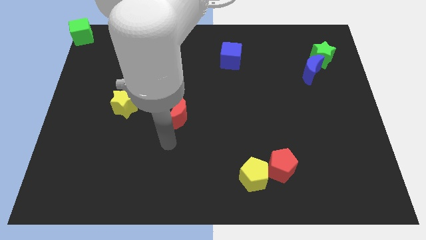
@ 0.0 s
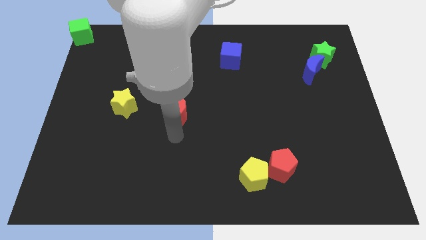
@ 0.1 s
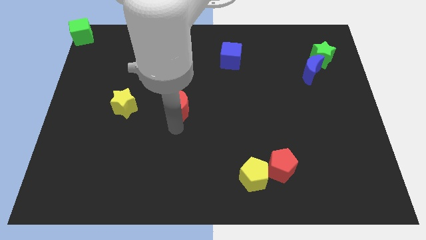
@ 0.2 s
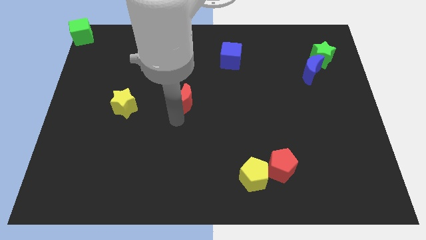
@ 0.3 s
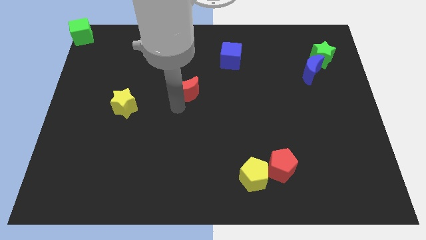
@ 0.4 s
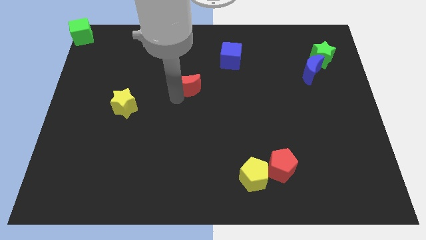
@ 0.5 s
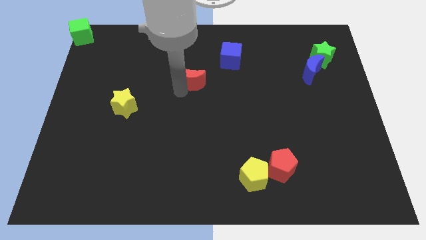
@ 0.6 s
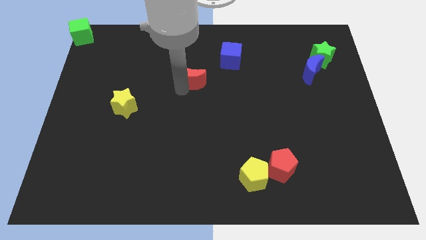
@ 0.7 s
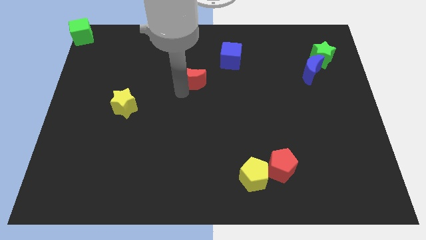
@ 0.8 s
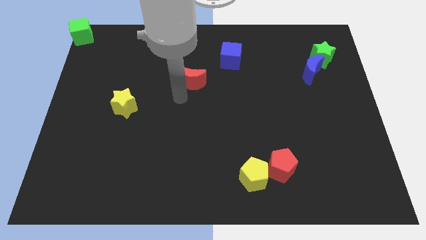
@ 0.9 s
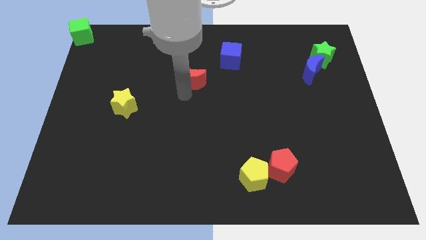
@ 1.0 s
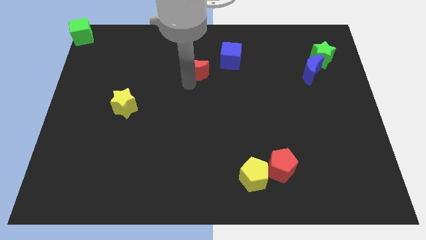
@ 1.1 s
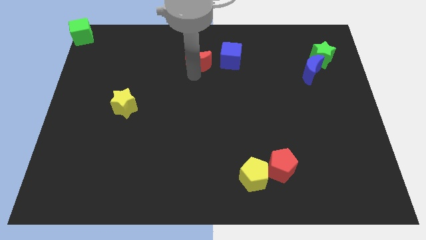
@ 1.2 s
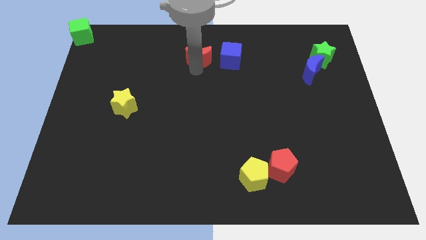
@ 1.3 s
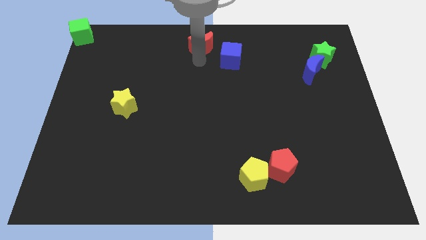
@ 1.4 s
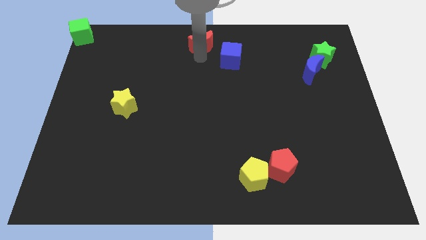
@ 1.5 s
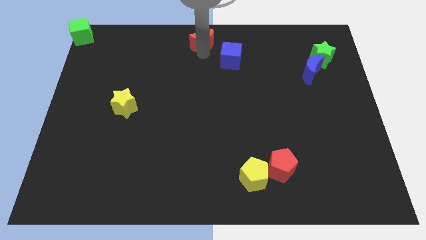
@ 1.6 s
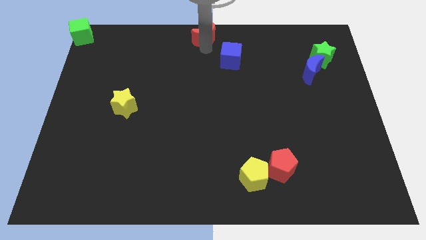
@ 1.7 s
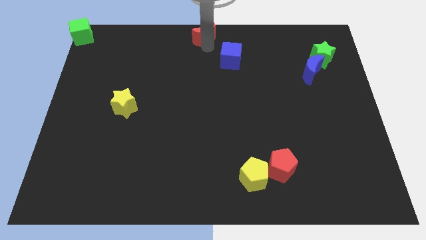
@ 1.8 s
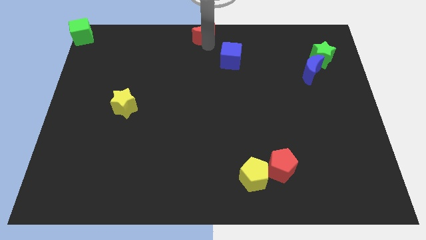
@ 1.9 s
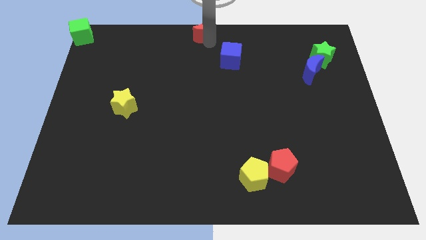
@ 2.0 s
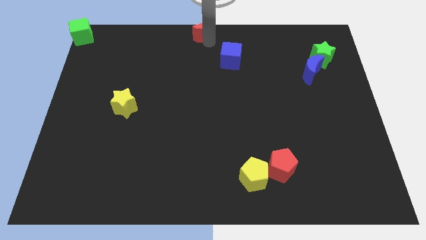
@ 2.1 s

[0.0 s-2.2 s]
move the red moon to the top center of the board

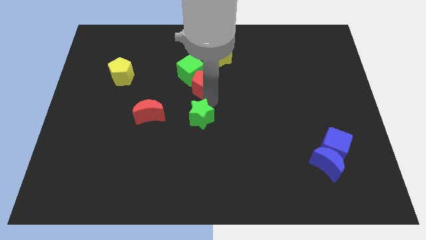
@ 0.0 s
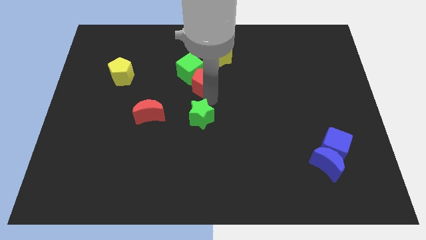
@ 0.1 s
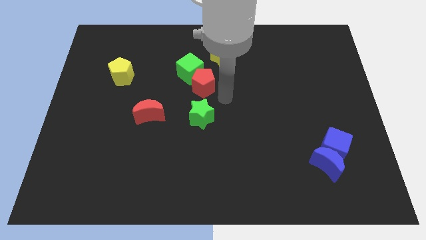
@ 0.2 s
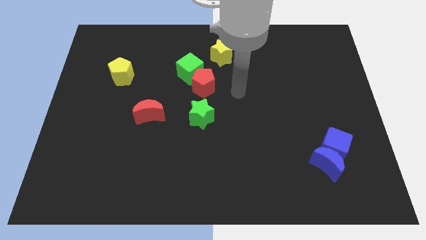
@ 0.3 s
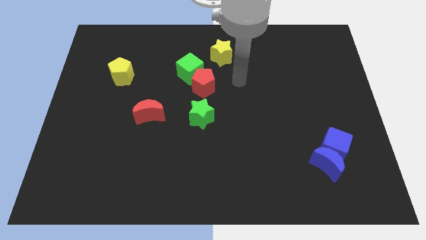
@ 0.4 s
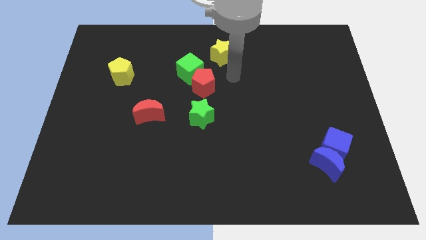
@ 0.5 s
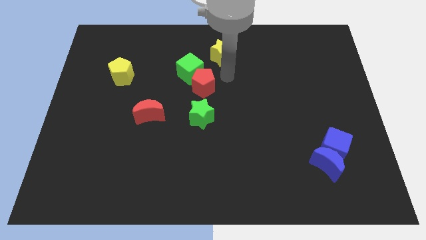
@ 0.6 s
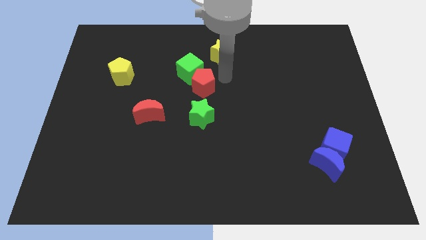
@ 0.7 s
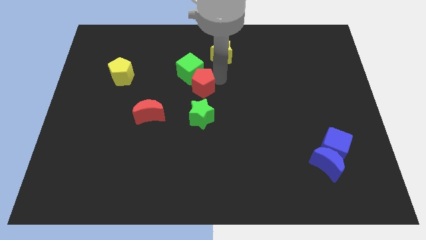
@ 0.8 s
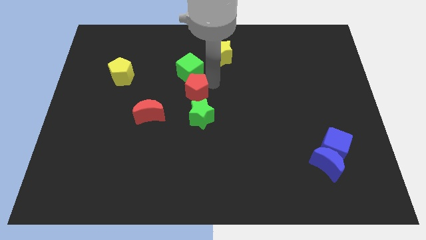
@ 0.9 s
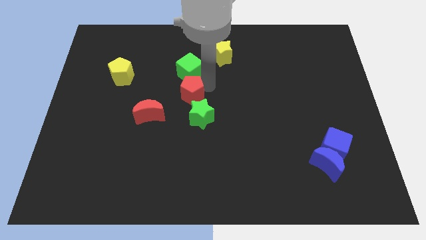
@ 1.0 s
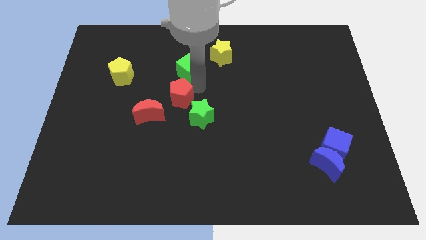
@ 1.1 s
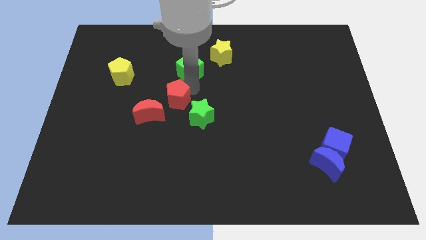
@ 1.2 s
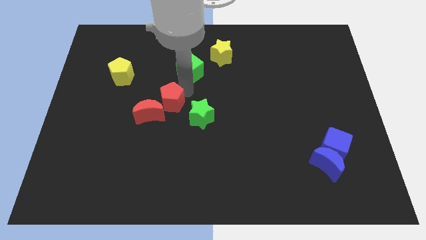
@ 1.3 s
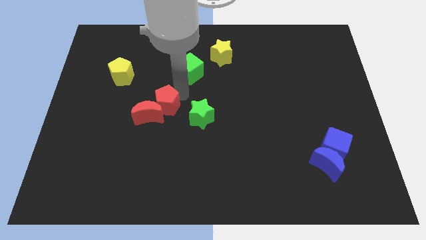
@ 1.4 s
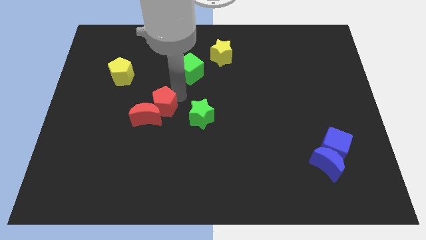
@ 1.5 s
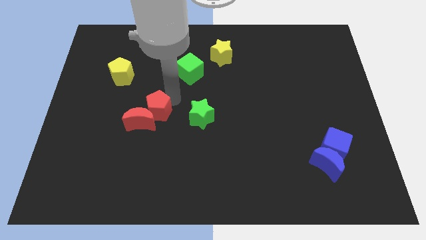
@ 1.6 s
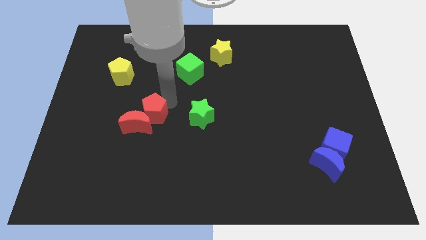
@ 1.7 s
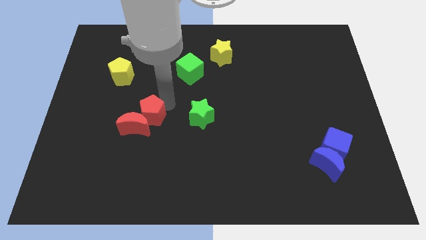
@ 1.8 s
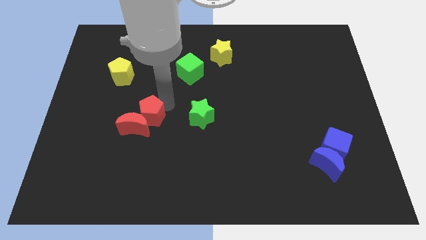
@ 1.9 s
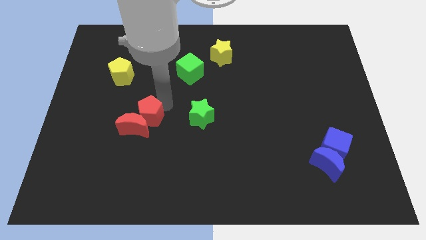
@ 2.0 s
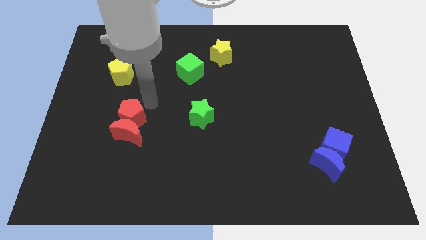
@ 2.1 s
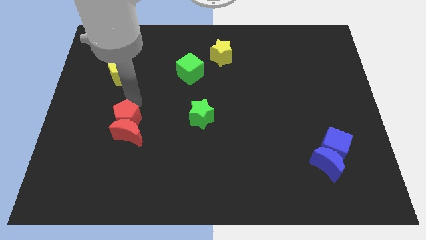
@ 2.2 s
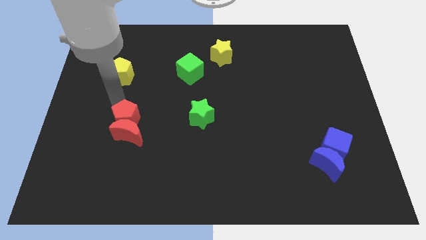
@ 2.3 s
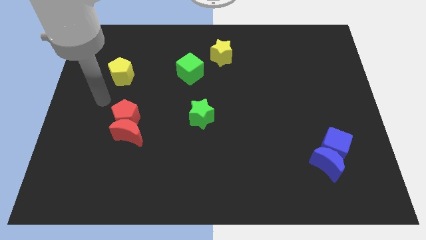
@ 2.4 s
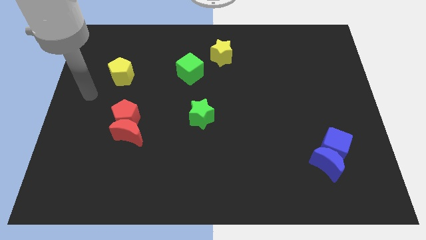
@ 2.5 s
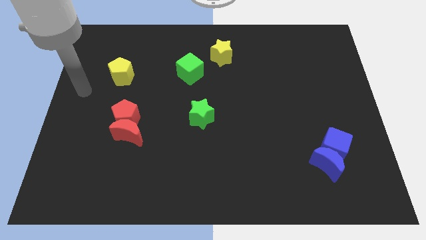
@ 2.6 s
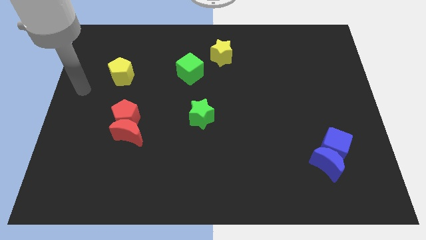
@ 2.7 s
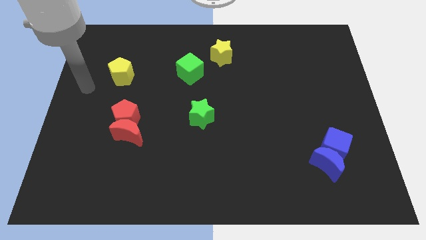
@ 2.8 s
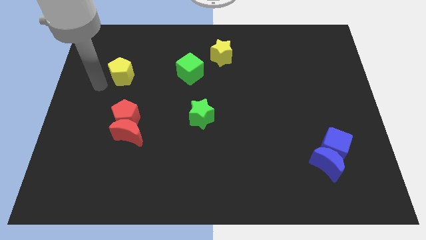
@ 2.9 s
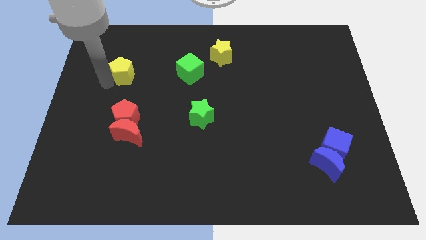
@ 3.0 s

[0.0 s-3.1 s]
push the red blocks towards the bottom side of the board

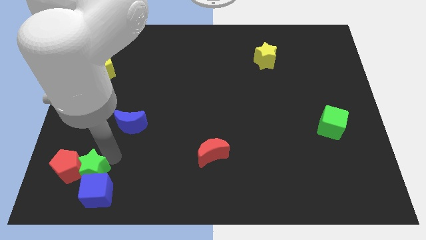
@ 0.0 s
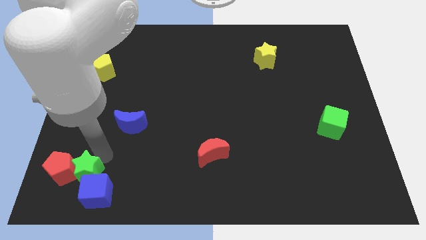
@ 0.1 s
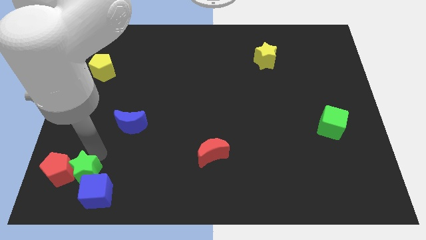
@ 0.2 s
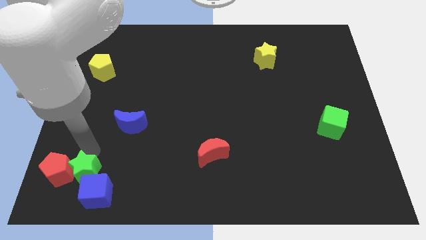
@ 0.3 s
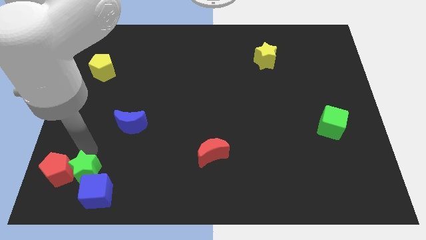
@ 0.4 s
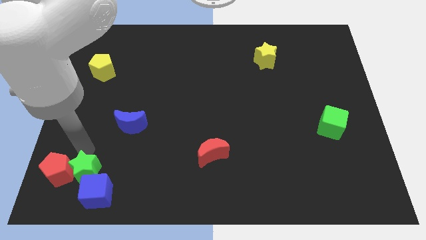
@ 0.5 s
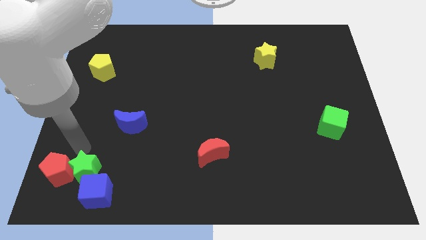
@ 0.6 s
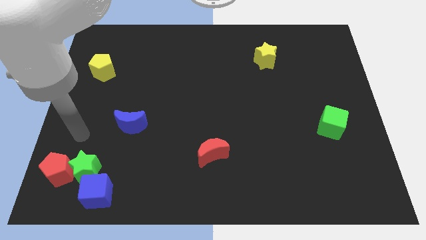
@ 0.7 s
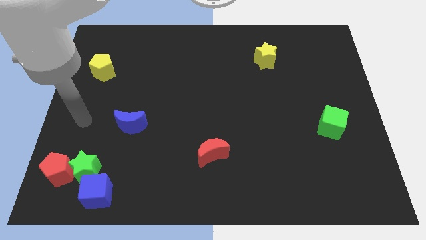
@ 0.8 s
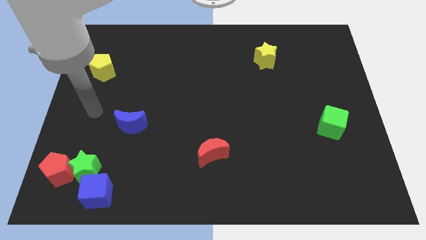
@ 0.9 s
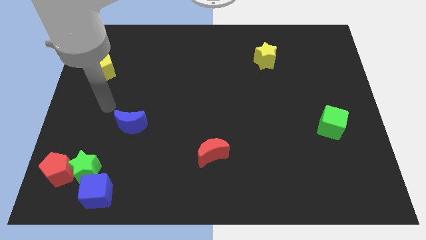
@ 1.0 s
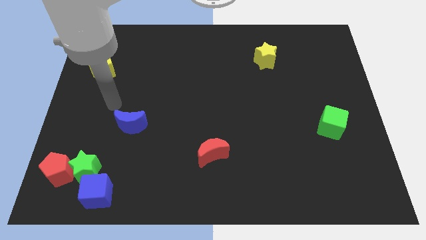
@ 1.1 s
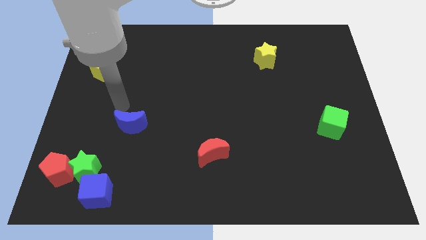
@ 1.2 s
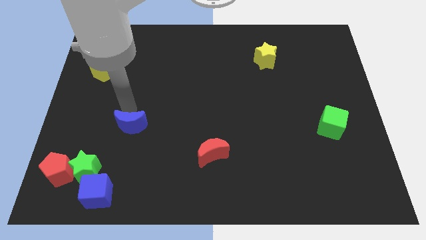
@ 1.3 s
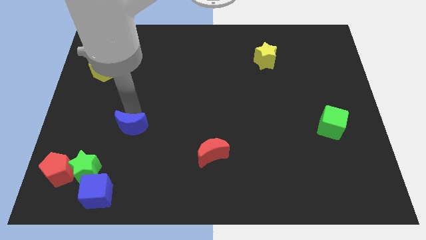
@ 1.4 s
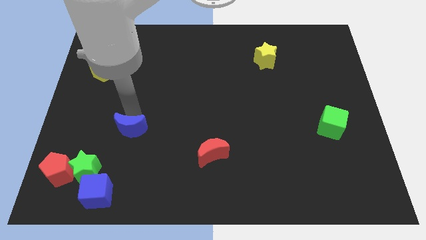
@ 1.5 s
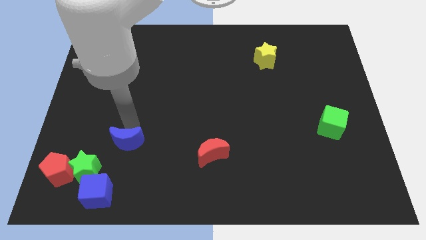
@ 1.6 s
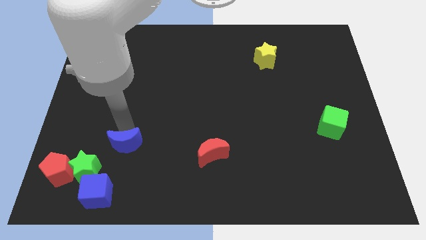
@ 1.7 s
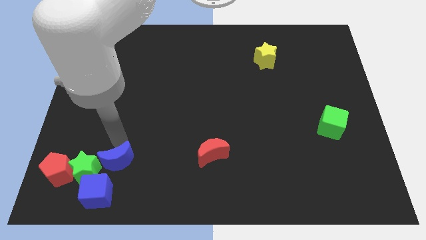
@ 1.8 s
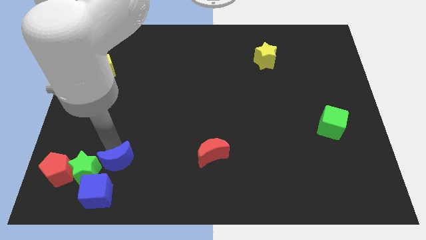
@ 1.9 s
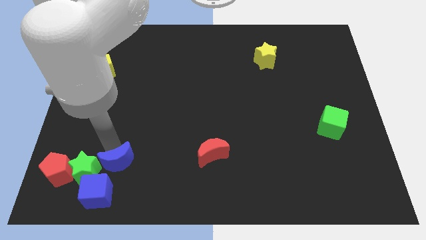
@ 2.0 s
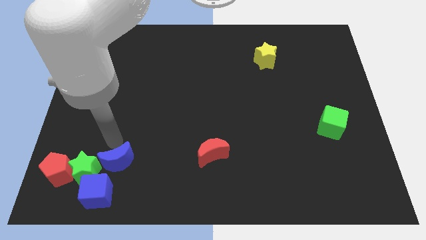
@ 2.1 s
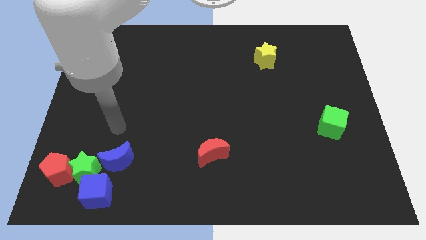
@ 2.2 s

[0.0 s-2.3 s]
place the blue moon right to the green star

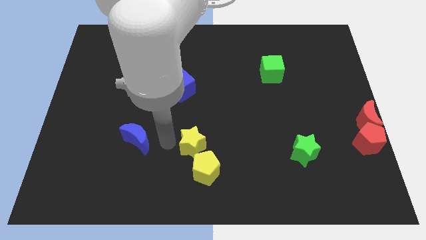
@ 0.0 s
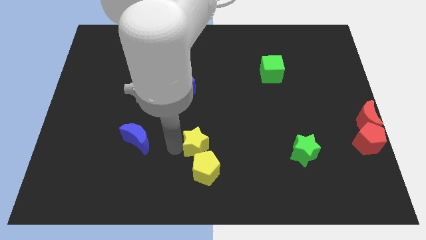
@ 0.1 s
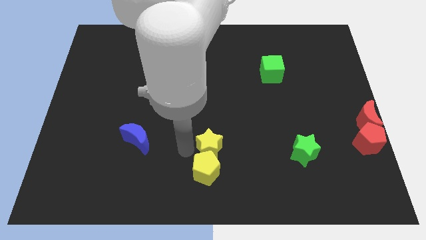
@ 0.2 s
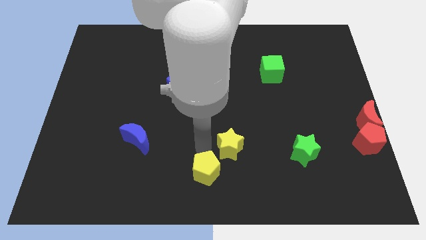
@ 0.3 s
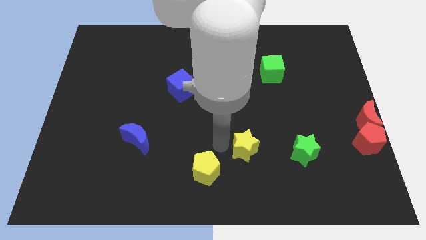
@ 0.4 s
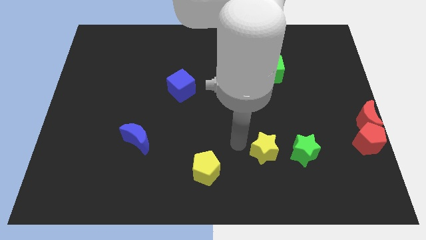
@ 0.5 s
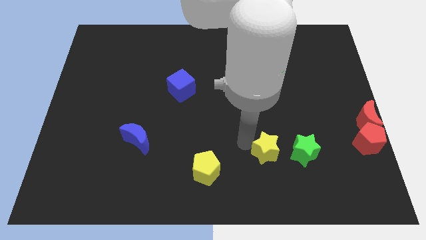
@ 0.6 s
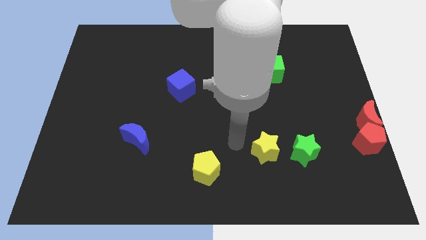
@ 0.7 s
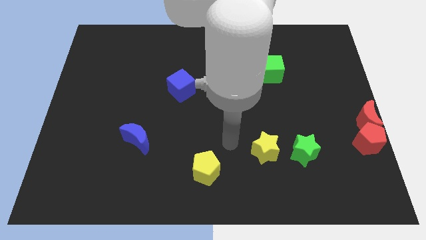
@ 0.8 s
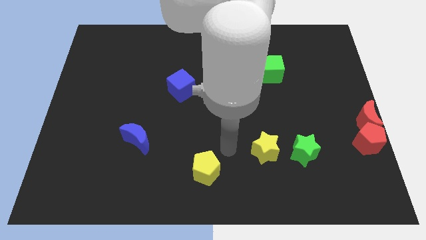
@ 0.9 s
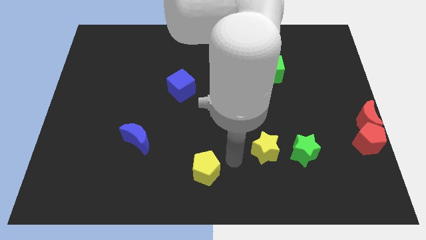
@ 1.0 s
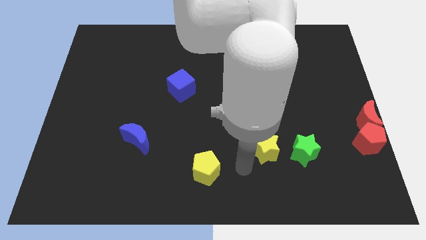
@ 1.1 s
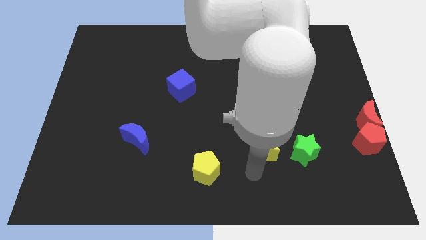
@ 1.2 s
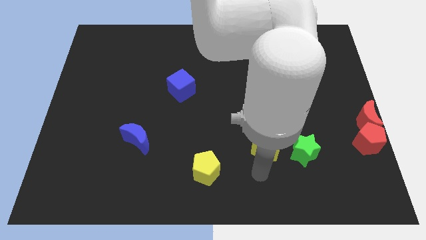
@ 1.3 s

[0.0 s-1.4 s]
push the yellow star left to the green star
